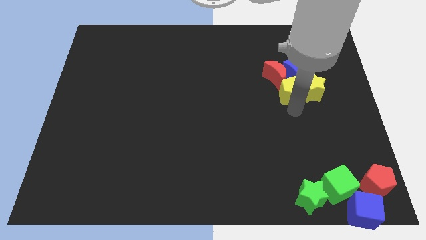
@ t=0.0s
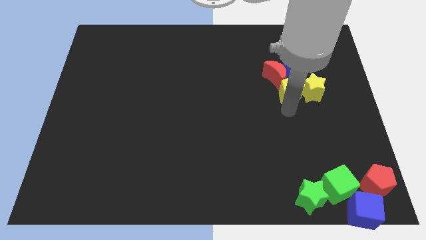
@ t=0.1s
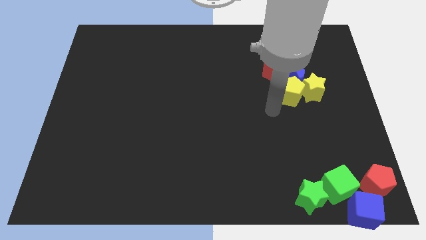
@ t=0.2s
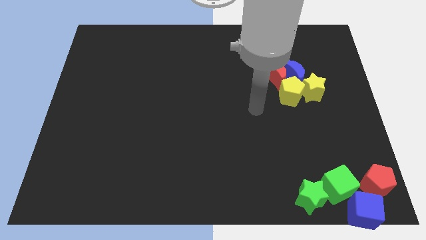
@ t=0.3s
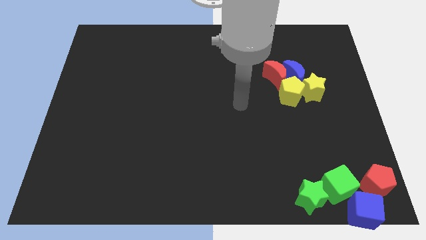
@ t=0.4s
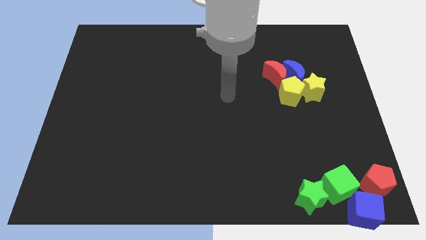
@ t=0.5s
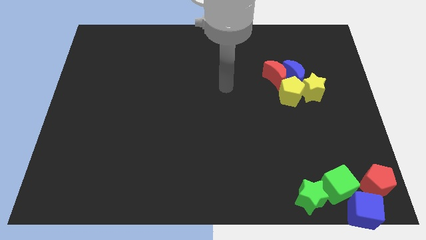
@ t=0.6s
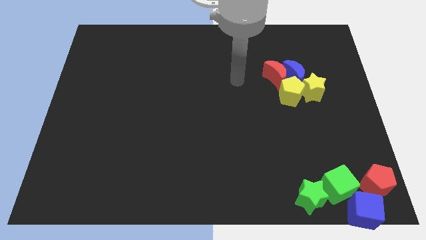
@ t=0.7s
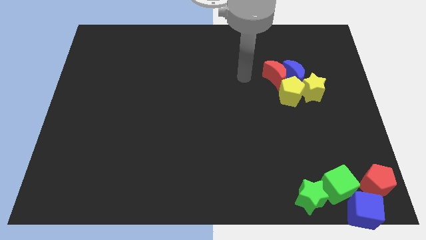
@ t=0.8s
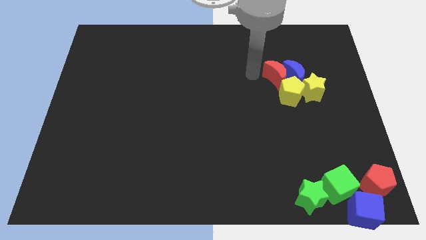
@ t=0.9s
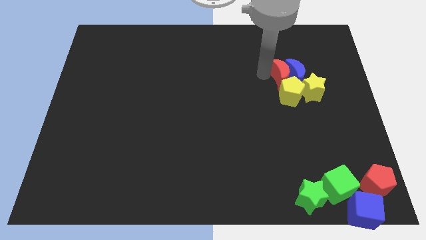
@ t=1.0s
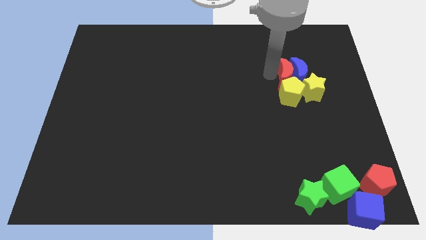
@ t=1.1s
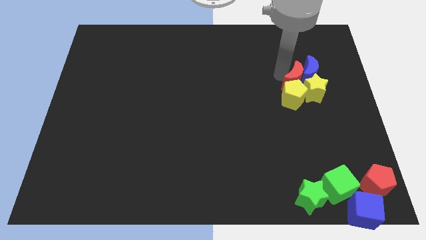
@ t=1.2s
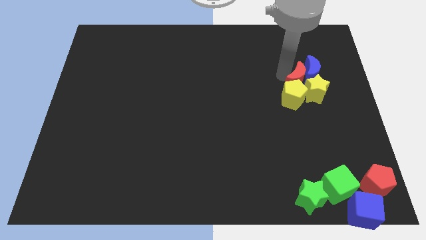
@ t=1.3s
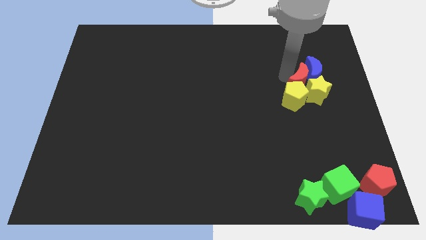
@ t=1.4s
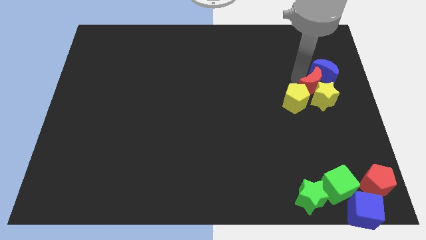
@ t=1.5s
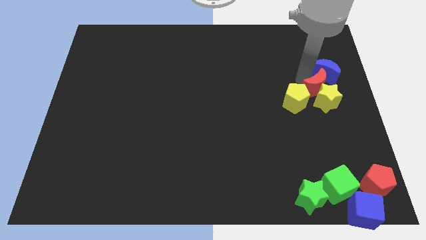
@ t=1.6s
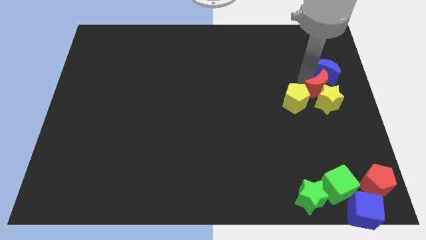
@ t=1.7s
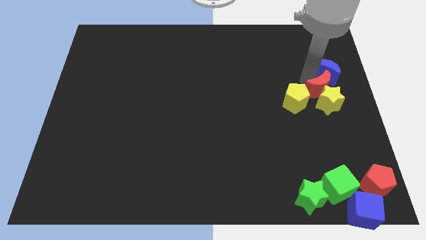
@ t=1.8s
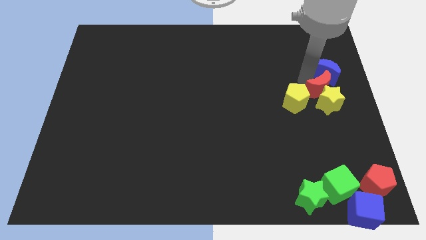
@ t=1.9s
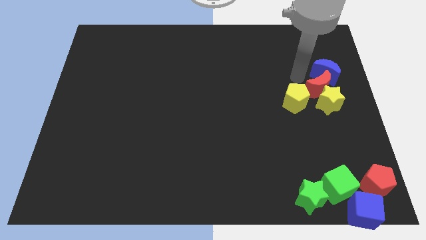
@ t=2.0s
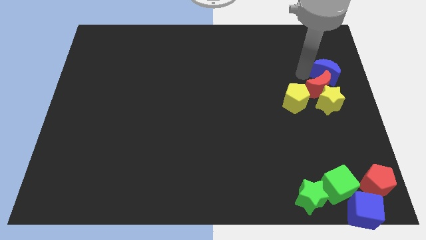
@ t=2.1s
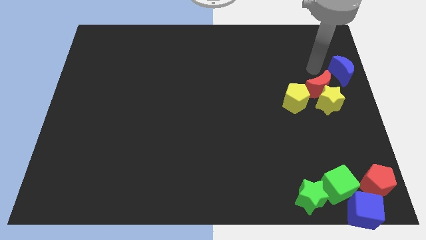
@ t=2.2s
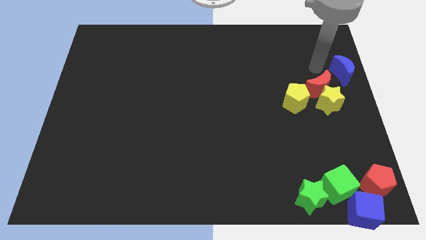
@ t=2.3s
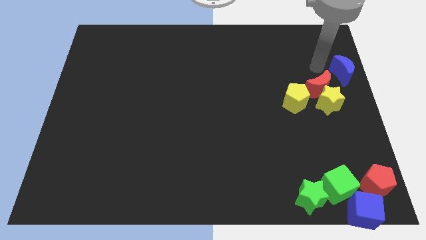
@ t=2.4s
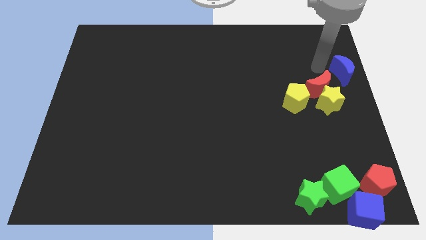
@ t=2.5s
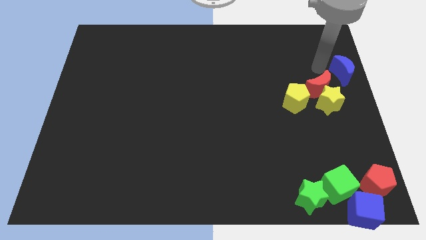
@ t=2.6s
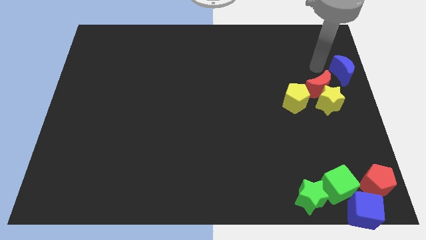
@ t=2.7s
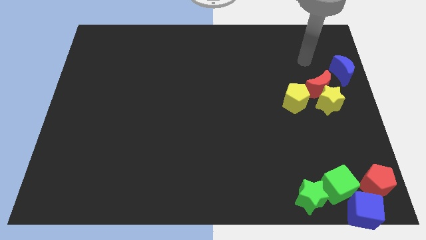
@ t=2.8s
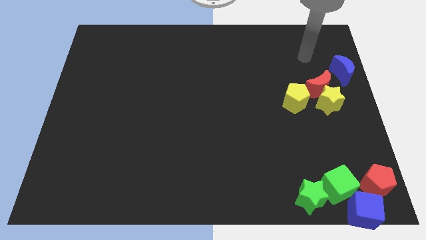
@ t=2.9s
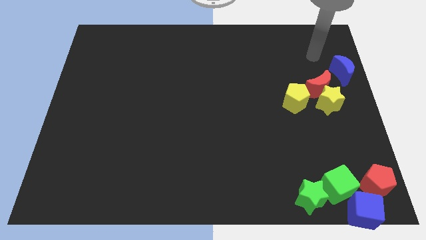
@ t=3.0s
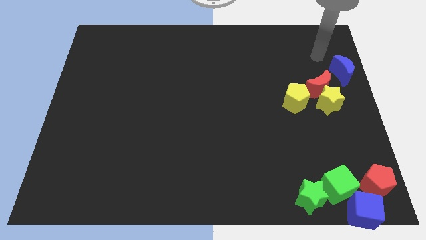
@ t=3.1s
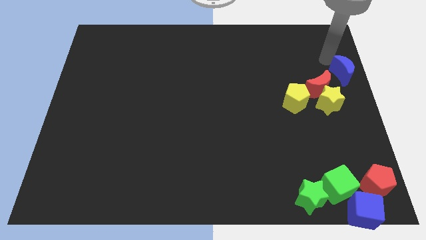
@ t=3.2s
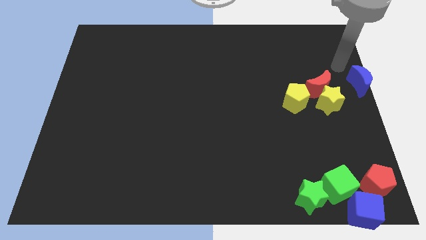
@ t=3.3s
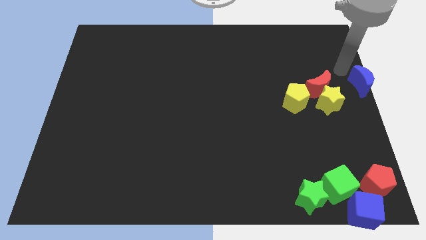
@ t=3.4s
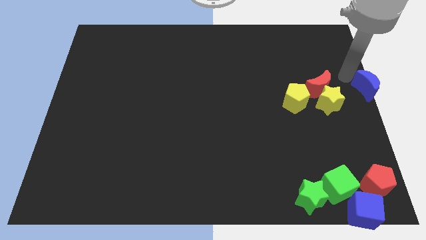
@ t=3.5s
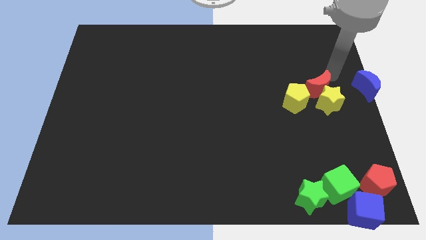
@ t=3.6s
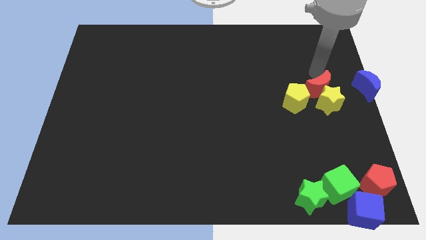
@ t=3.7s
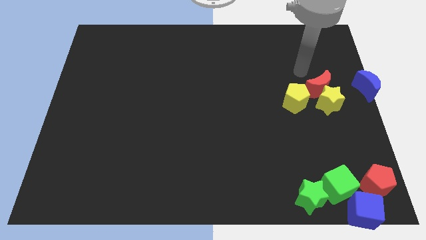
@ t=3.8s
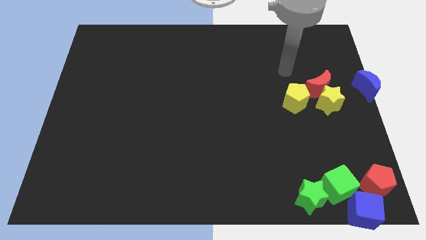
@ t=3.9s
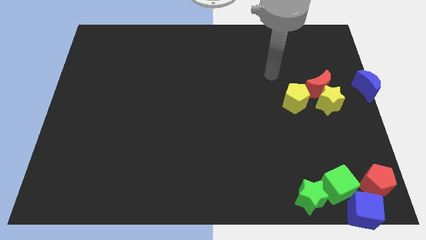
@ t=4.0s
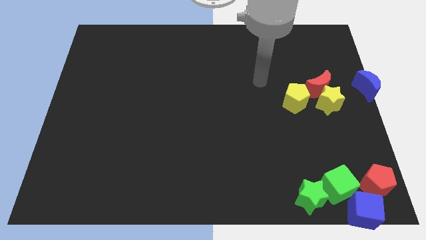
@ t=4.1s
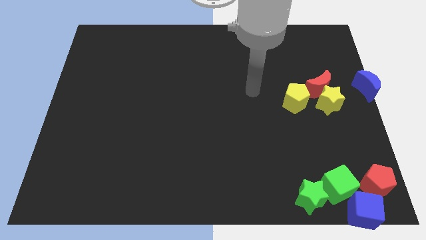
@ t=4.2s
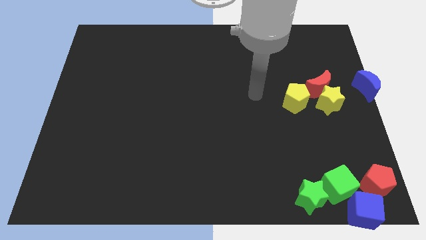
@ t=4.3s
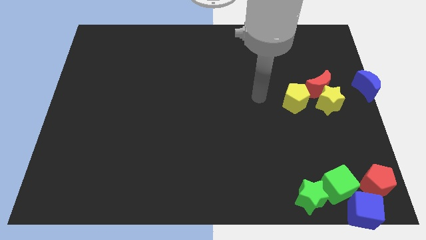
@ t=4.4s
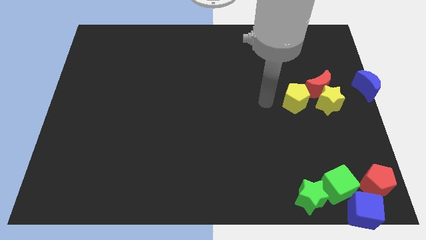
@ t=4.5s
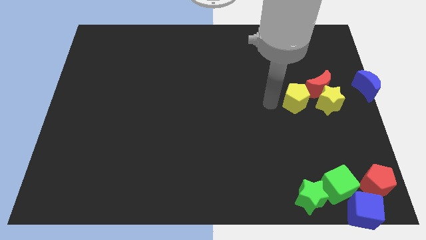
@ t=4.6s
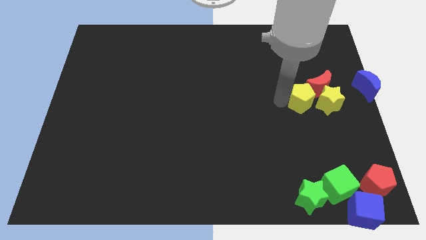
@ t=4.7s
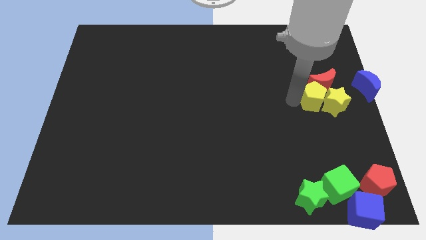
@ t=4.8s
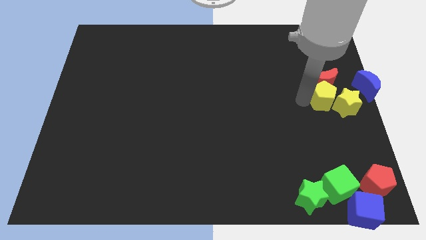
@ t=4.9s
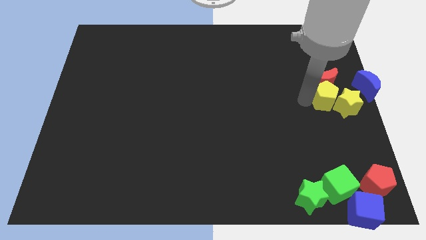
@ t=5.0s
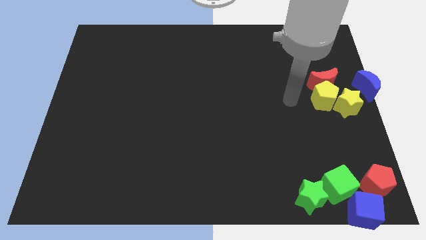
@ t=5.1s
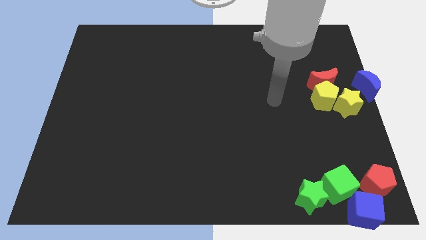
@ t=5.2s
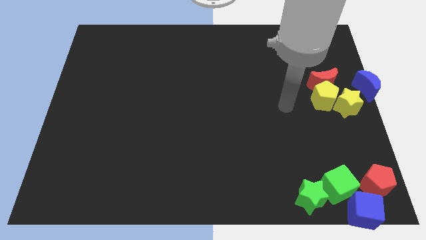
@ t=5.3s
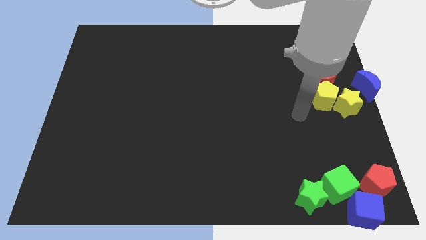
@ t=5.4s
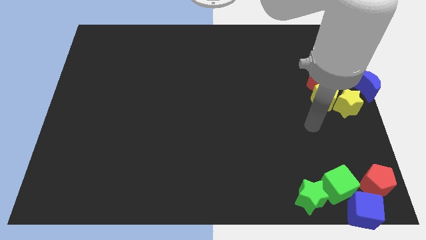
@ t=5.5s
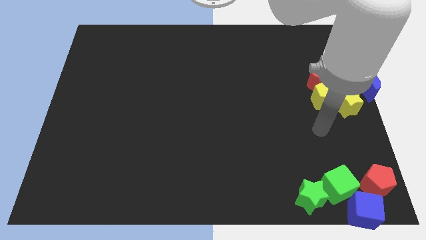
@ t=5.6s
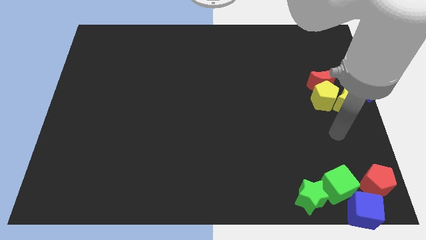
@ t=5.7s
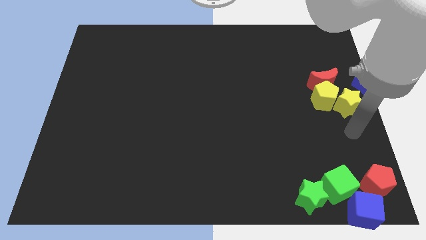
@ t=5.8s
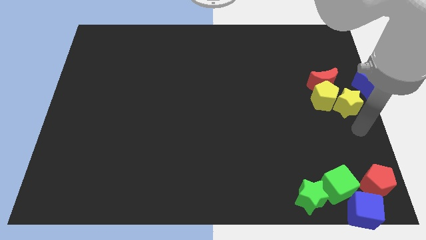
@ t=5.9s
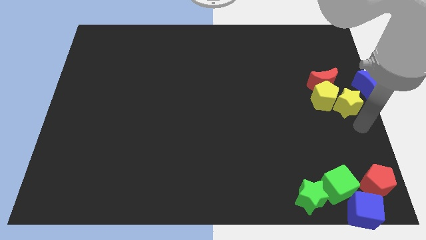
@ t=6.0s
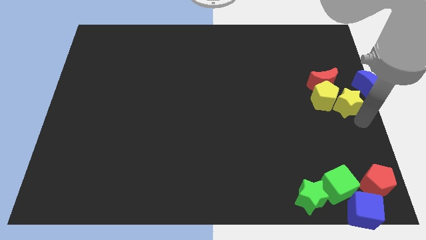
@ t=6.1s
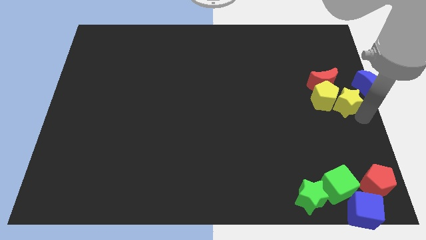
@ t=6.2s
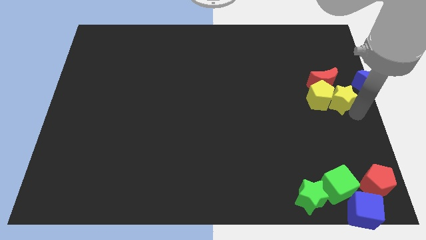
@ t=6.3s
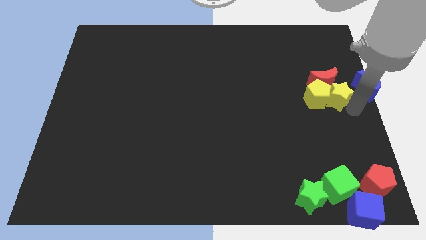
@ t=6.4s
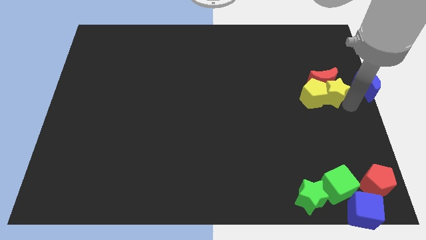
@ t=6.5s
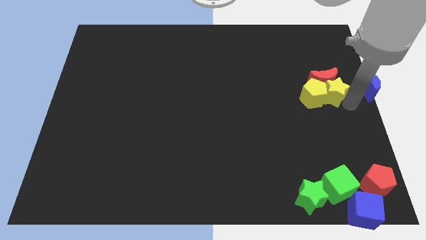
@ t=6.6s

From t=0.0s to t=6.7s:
make a group of blocks at the left side of the blue crescent

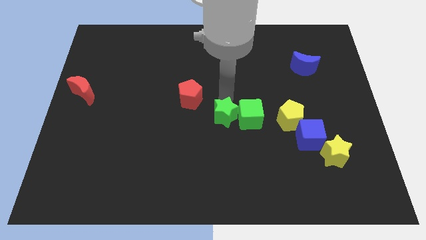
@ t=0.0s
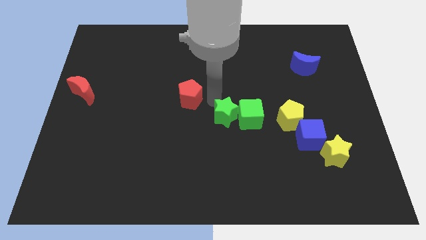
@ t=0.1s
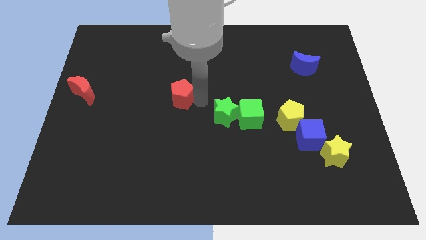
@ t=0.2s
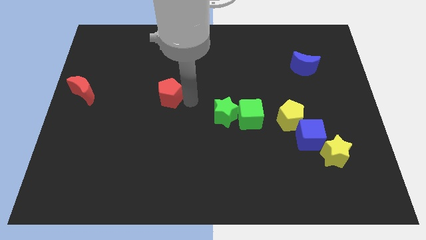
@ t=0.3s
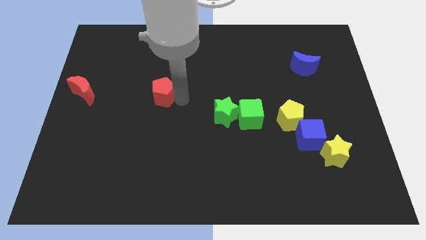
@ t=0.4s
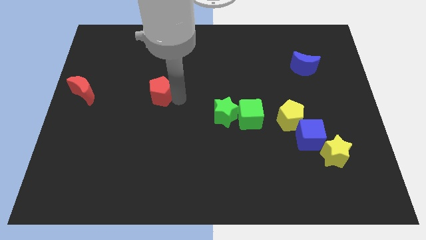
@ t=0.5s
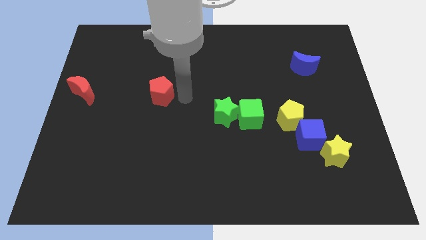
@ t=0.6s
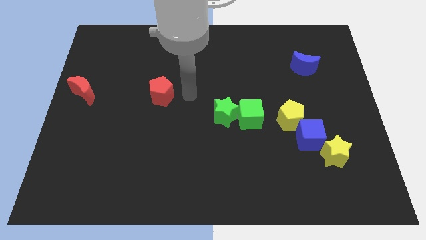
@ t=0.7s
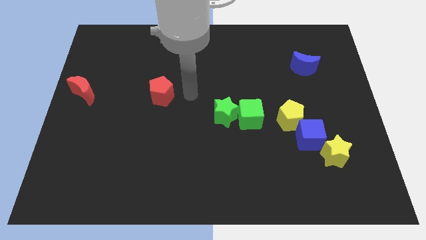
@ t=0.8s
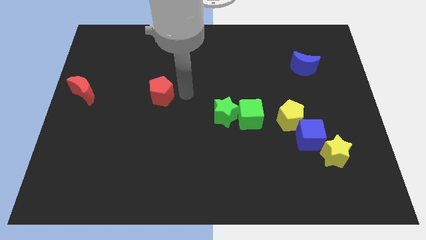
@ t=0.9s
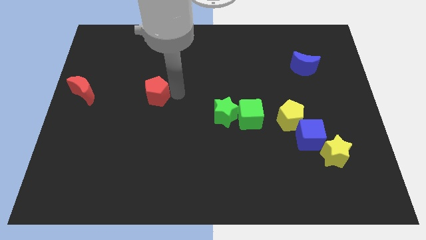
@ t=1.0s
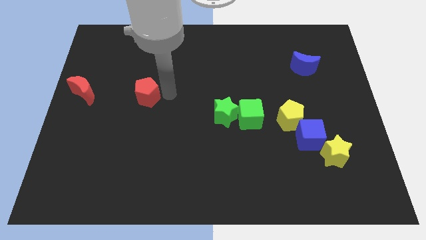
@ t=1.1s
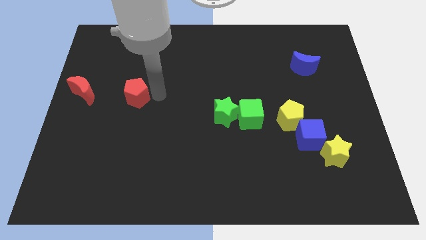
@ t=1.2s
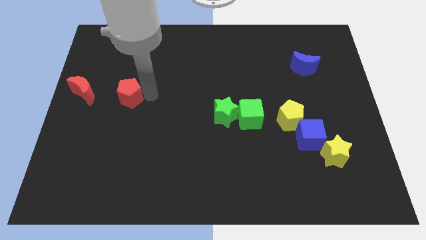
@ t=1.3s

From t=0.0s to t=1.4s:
push the red pentagon to the left side

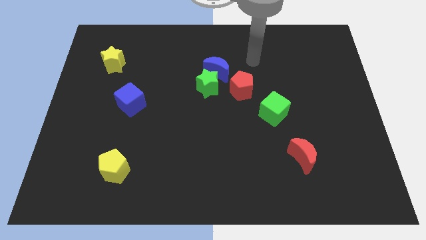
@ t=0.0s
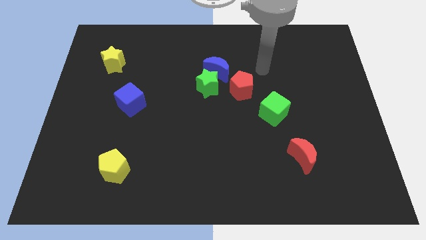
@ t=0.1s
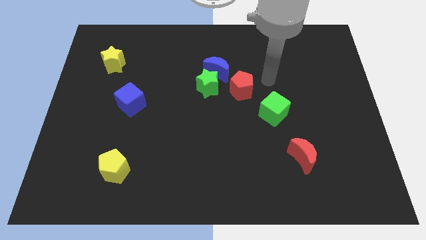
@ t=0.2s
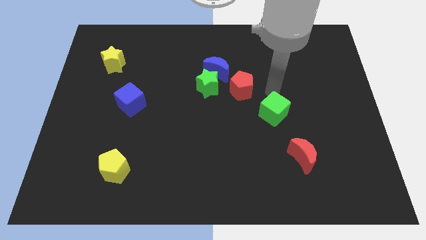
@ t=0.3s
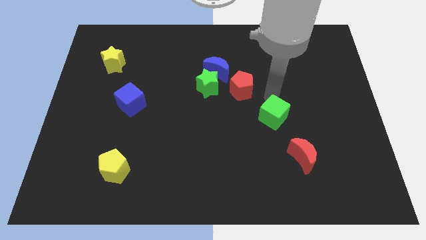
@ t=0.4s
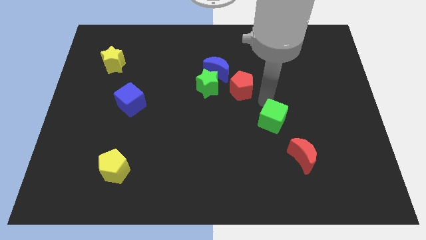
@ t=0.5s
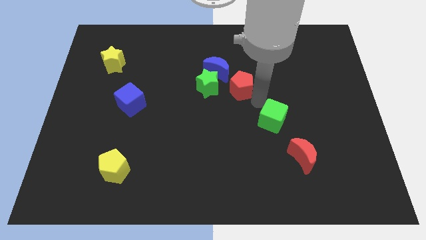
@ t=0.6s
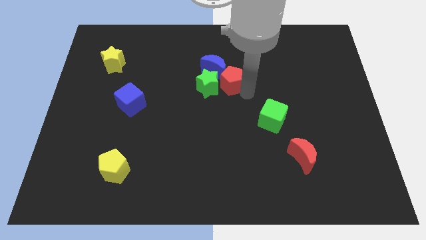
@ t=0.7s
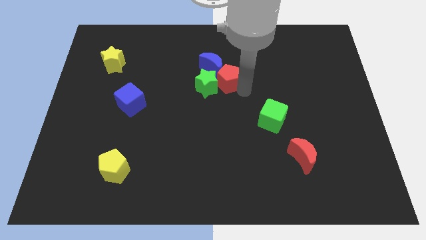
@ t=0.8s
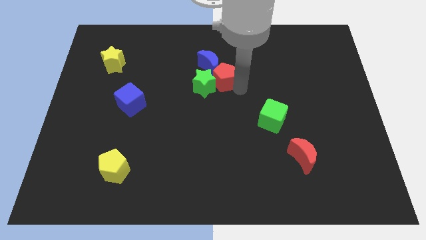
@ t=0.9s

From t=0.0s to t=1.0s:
put the red pentagon into the blue moon
